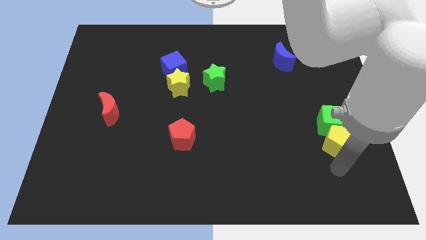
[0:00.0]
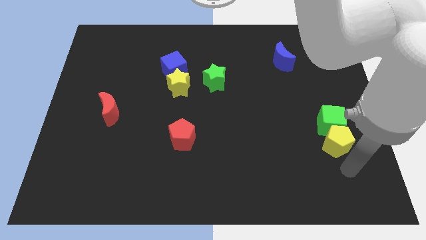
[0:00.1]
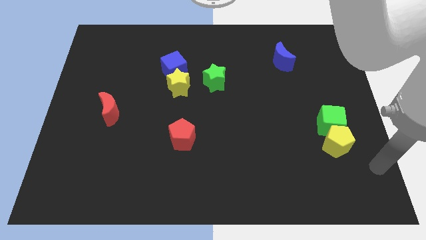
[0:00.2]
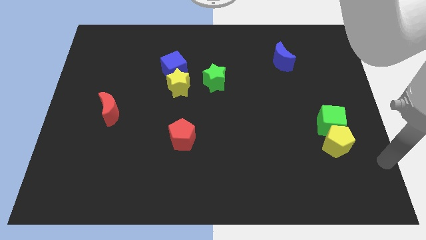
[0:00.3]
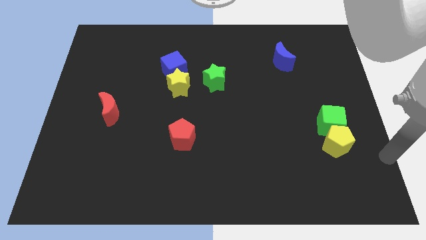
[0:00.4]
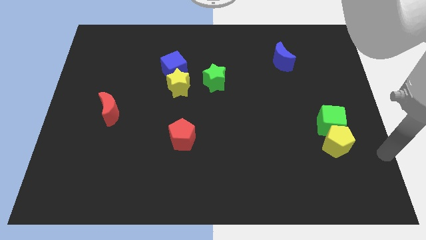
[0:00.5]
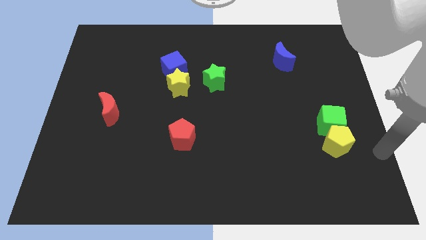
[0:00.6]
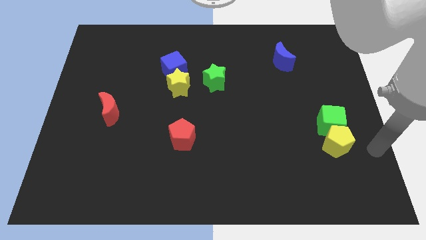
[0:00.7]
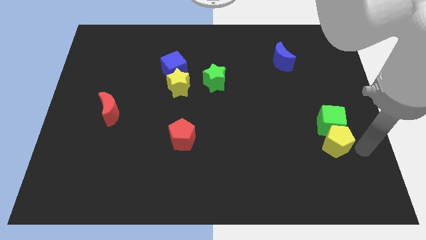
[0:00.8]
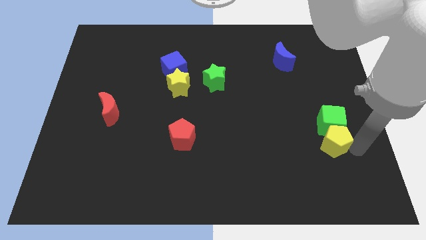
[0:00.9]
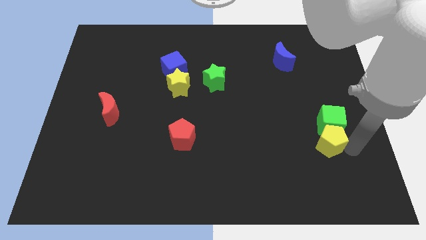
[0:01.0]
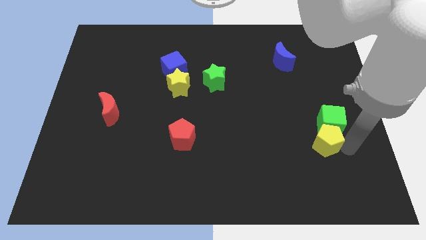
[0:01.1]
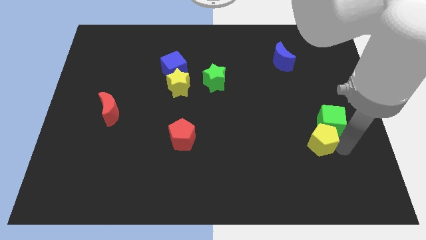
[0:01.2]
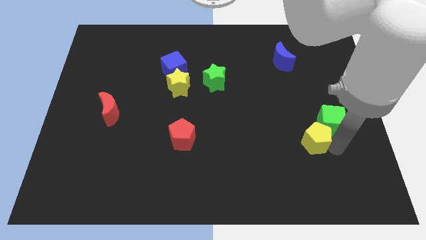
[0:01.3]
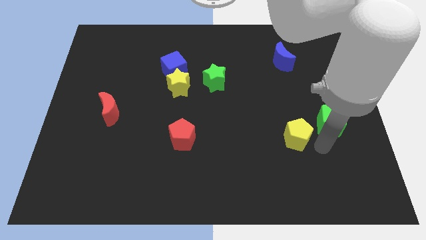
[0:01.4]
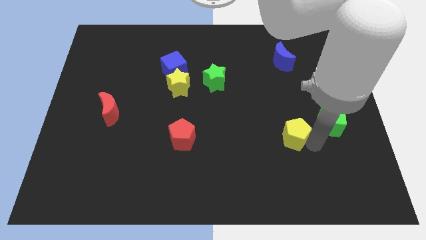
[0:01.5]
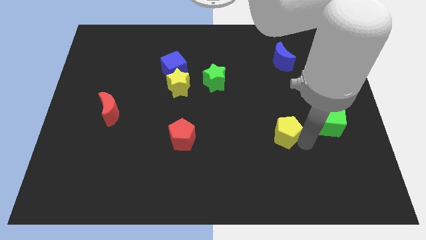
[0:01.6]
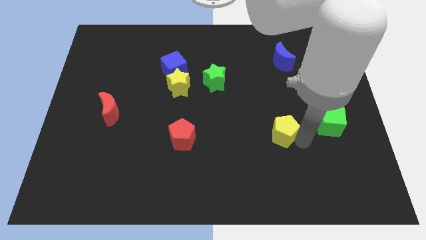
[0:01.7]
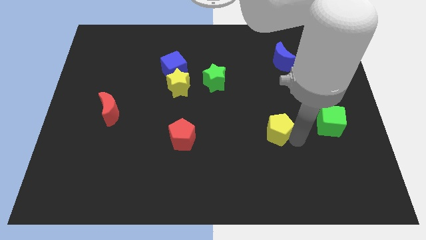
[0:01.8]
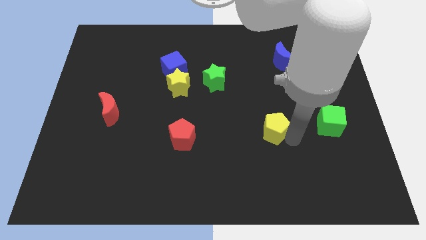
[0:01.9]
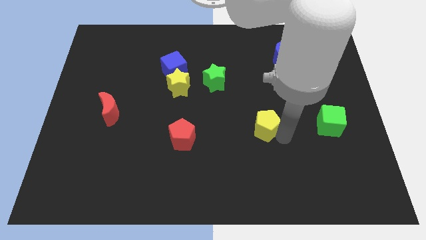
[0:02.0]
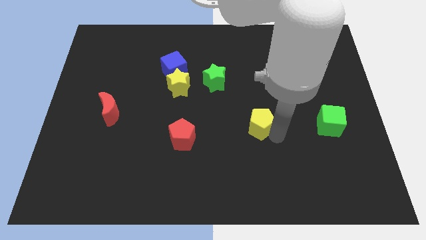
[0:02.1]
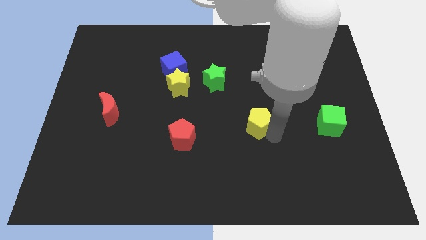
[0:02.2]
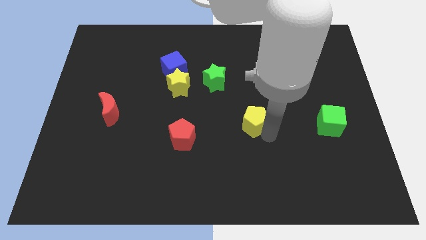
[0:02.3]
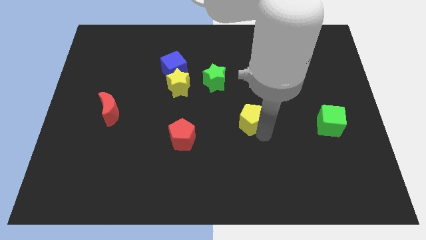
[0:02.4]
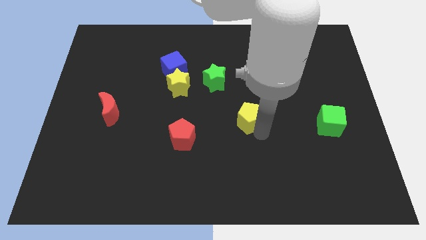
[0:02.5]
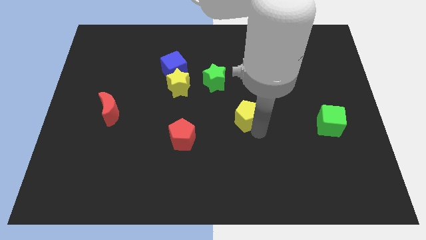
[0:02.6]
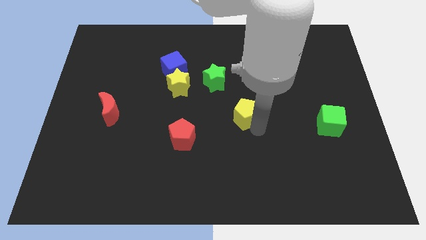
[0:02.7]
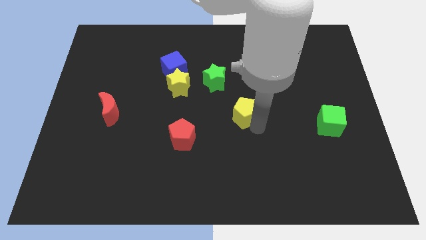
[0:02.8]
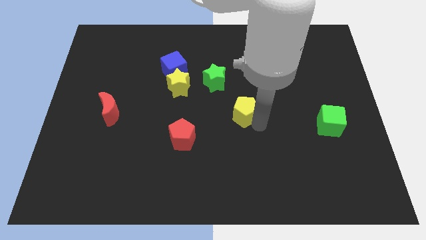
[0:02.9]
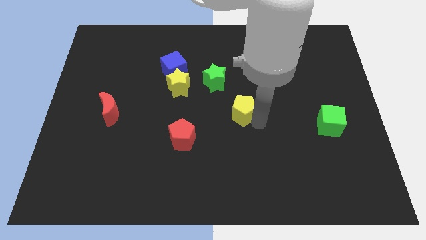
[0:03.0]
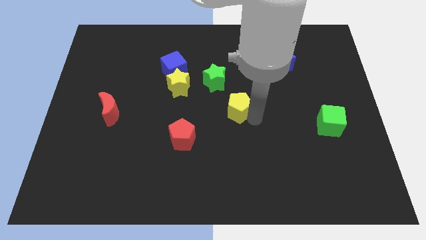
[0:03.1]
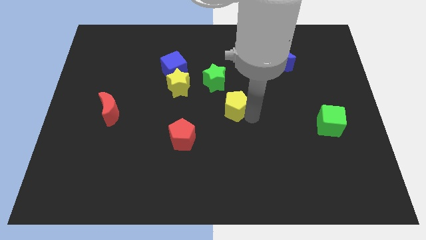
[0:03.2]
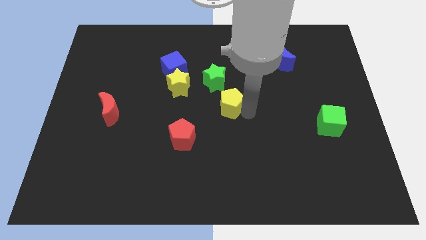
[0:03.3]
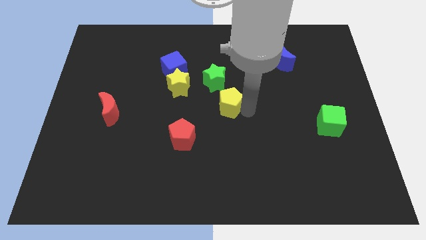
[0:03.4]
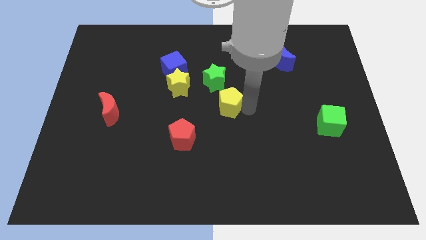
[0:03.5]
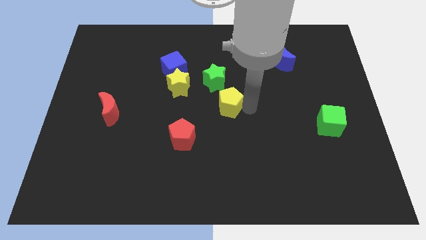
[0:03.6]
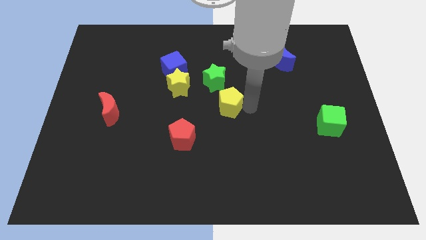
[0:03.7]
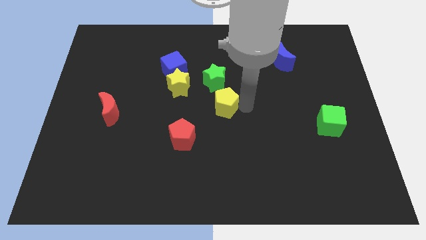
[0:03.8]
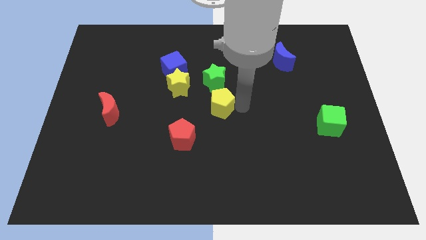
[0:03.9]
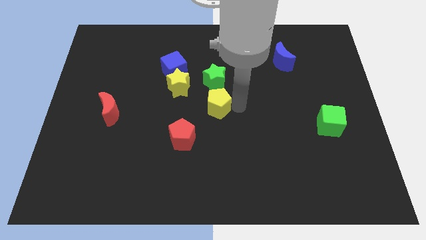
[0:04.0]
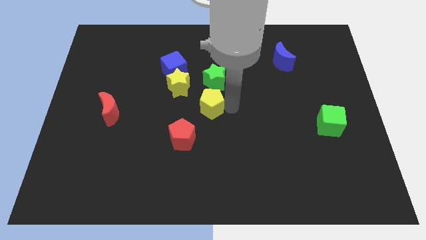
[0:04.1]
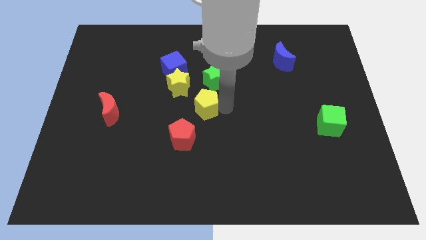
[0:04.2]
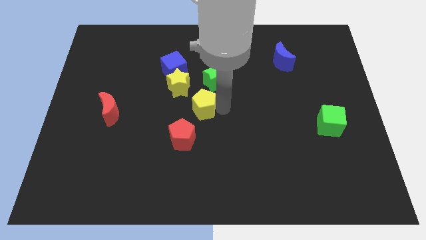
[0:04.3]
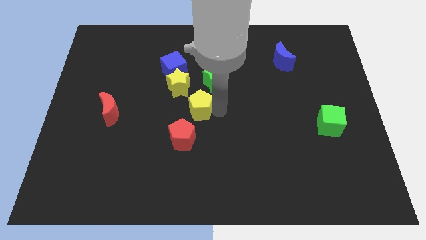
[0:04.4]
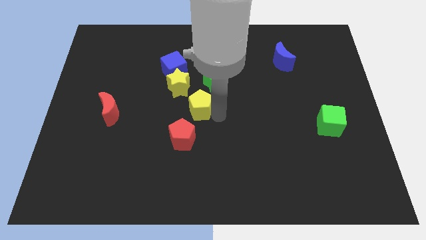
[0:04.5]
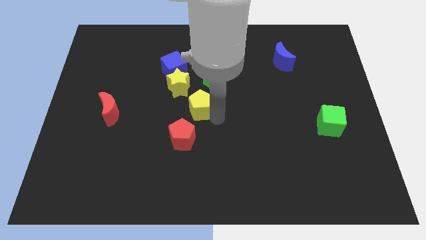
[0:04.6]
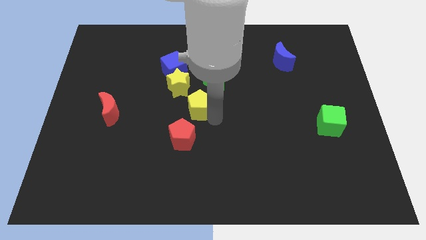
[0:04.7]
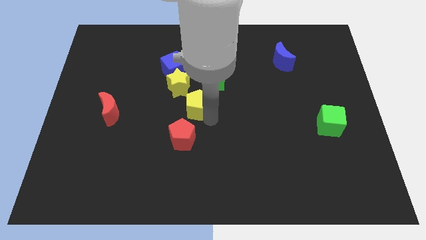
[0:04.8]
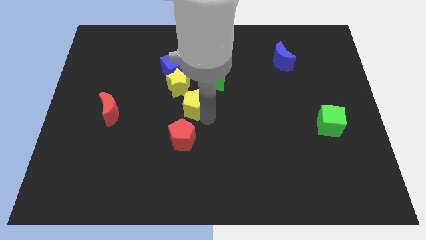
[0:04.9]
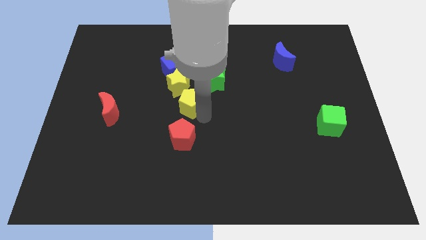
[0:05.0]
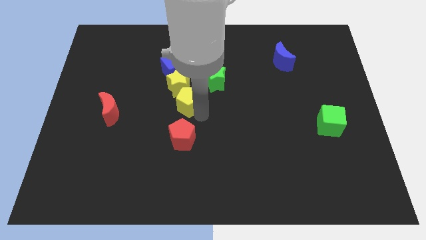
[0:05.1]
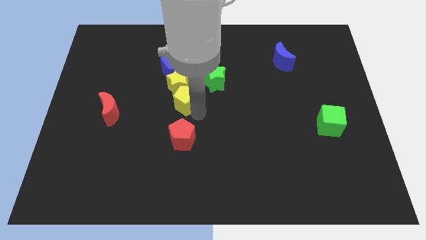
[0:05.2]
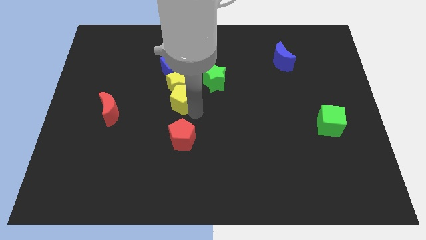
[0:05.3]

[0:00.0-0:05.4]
push the yellow pentagon towards the yellow star

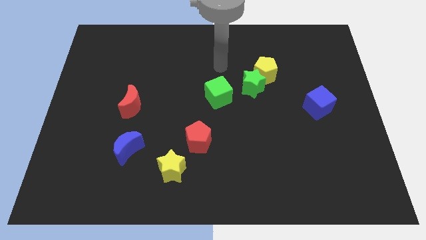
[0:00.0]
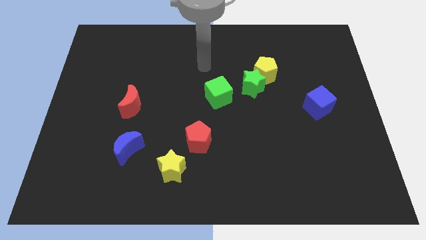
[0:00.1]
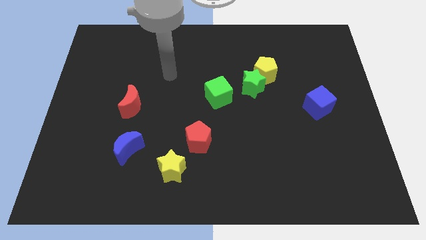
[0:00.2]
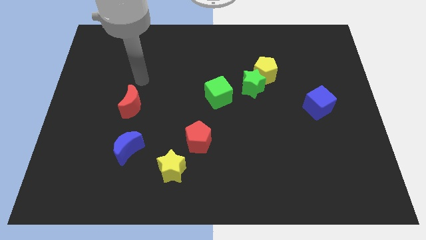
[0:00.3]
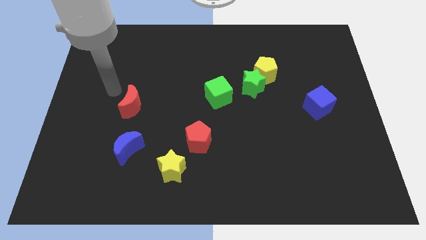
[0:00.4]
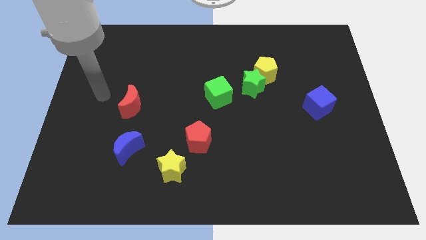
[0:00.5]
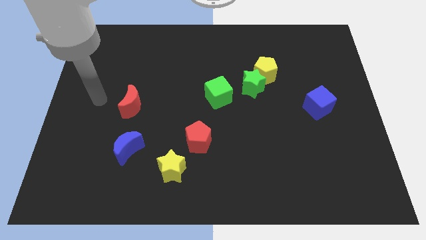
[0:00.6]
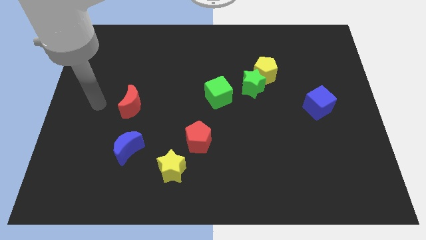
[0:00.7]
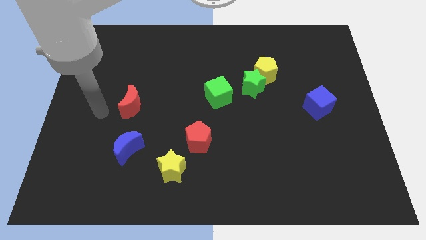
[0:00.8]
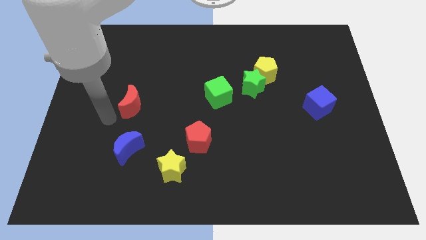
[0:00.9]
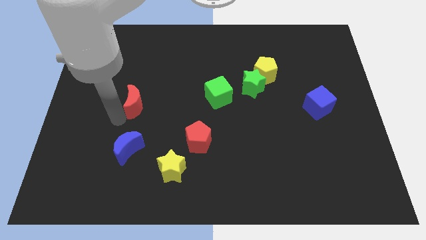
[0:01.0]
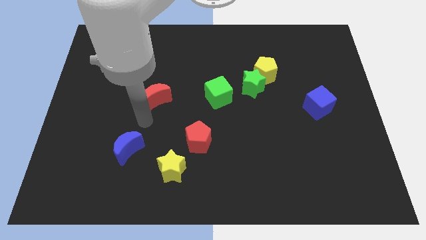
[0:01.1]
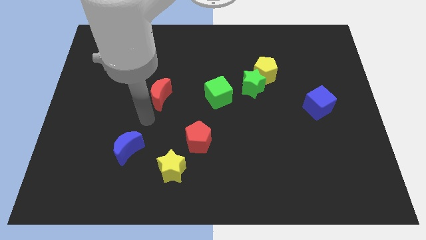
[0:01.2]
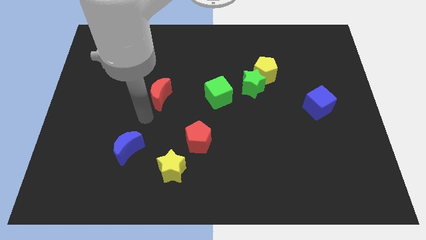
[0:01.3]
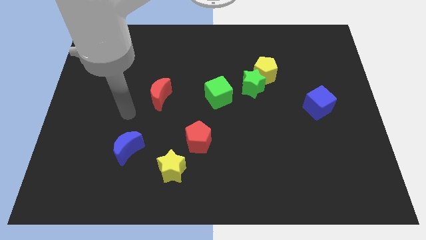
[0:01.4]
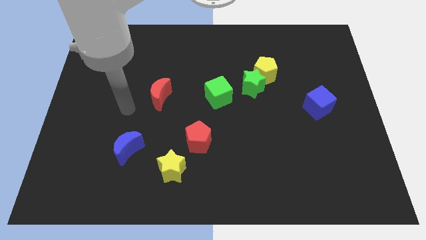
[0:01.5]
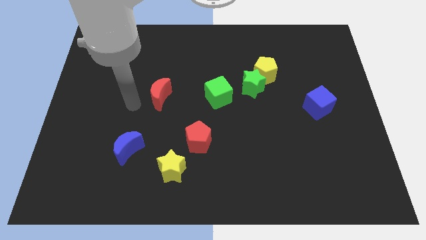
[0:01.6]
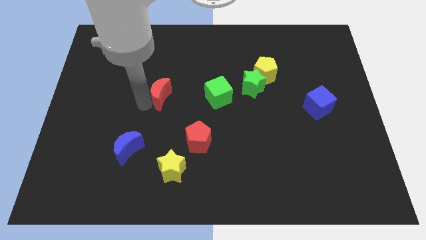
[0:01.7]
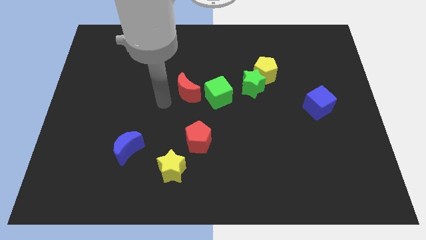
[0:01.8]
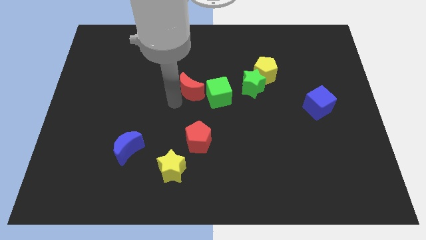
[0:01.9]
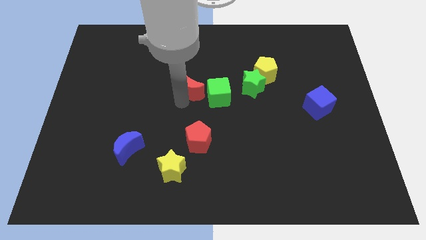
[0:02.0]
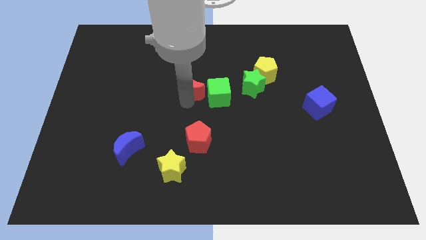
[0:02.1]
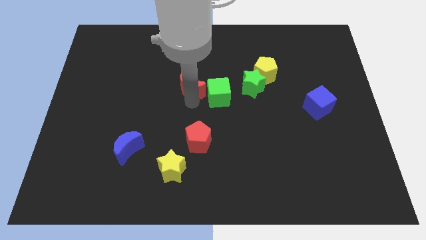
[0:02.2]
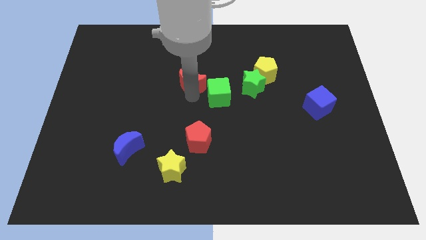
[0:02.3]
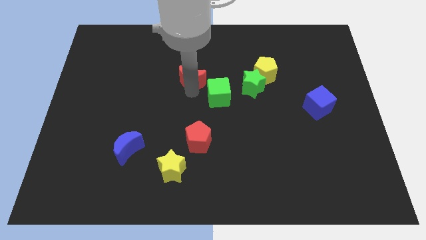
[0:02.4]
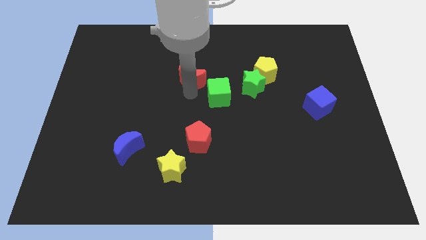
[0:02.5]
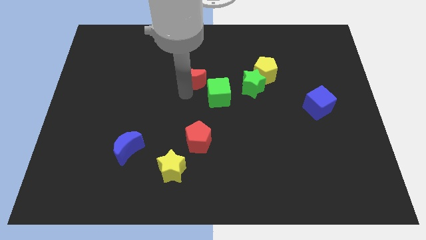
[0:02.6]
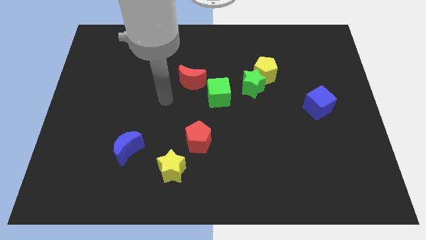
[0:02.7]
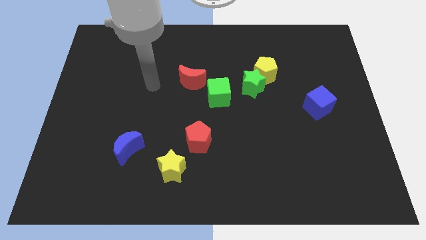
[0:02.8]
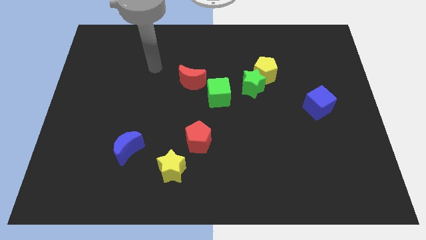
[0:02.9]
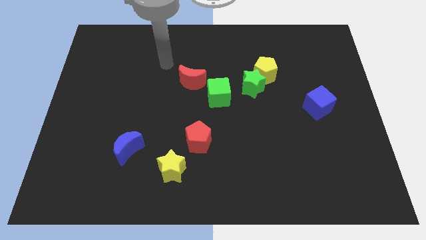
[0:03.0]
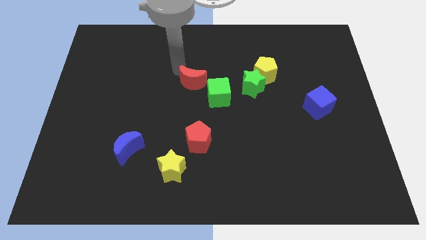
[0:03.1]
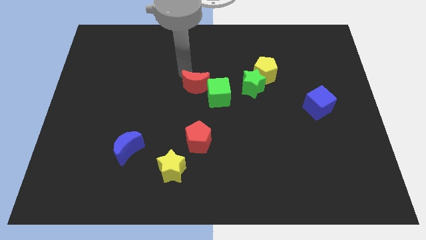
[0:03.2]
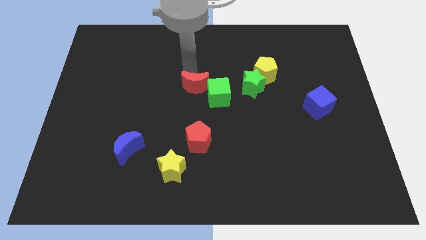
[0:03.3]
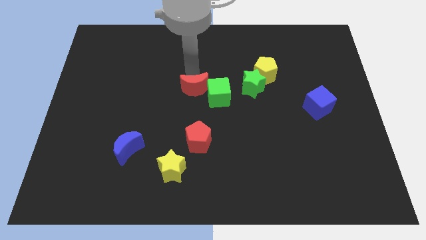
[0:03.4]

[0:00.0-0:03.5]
put the red moon close to the green cube
